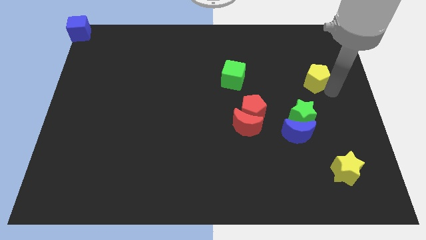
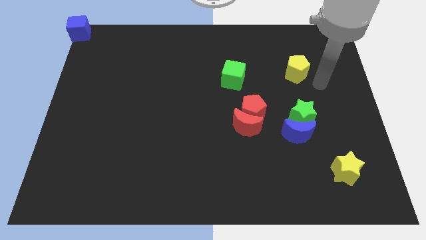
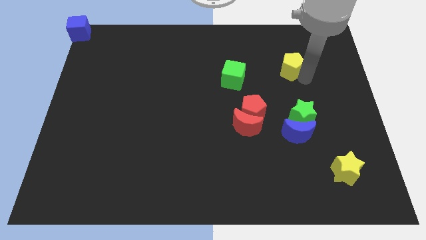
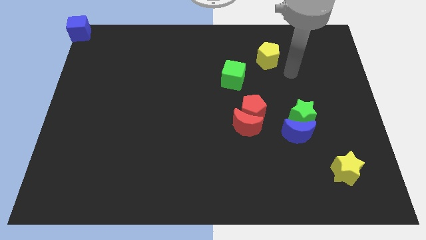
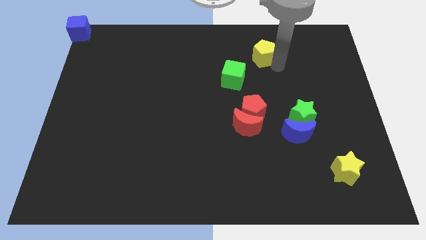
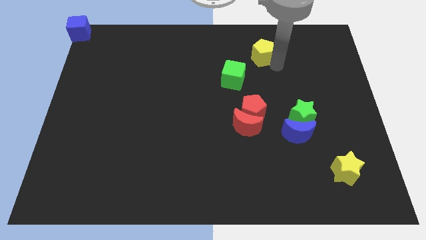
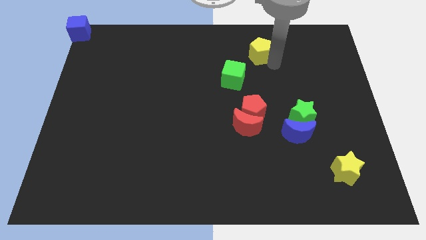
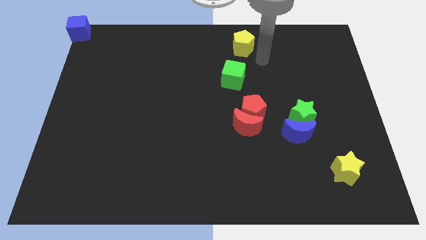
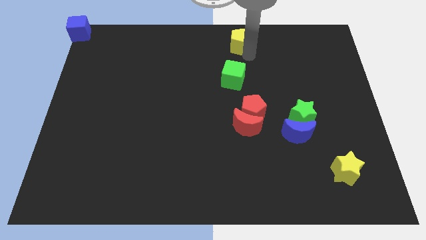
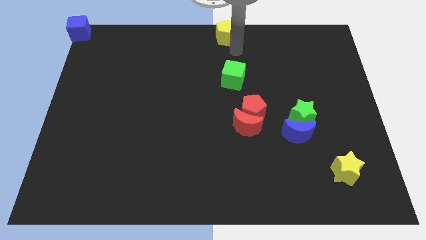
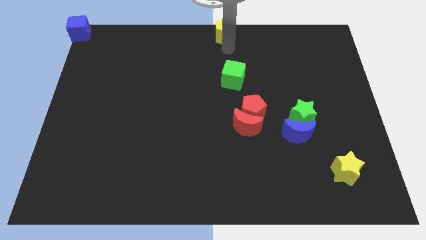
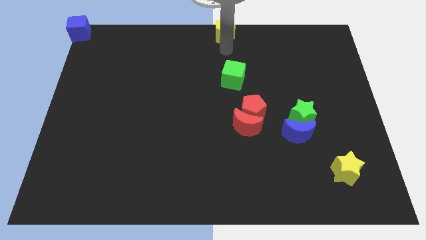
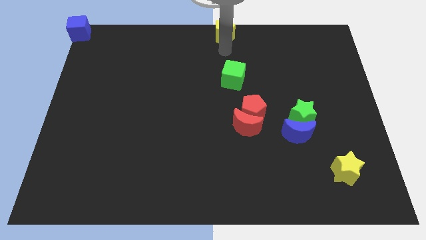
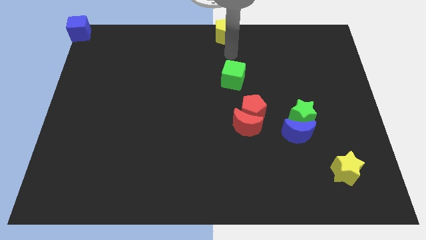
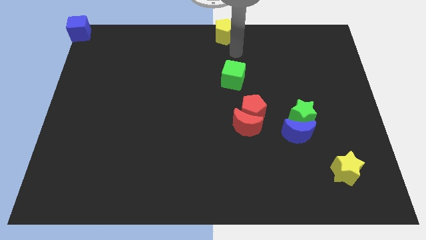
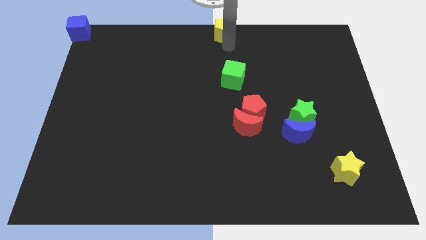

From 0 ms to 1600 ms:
put the yellow pentagon to the top center of the board

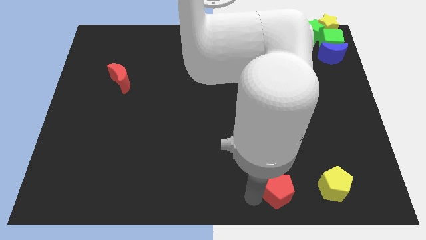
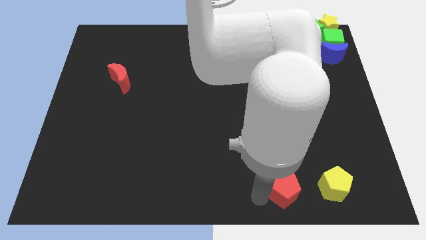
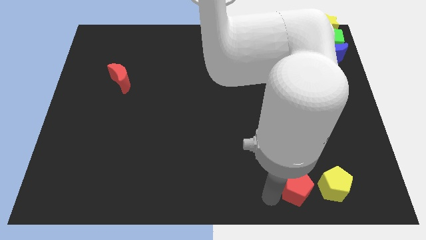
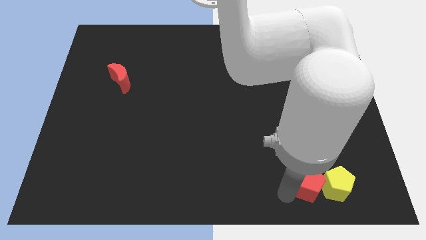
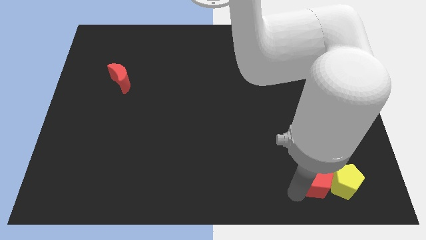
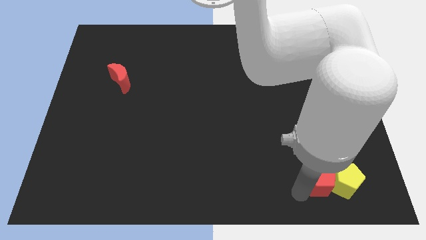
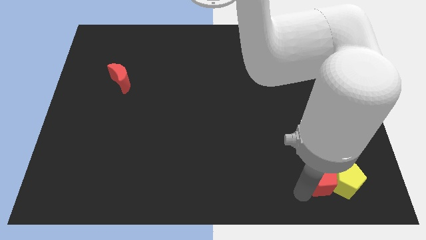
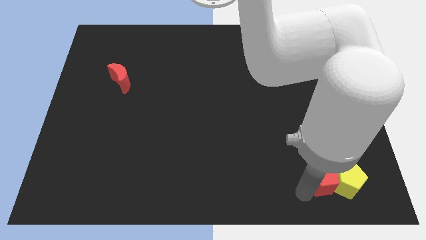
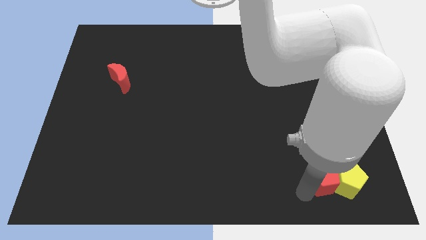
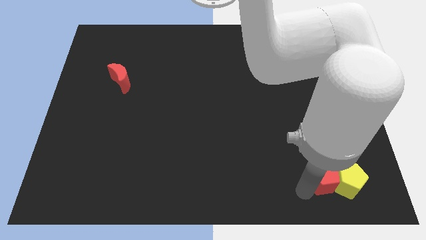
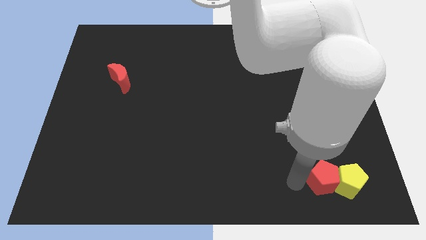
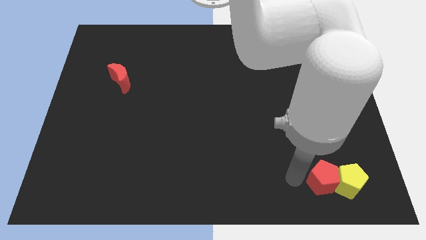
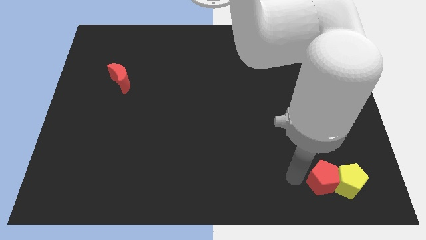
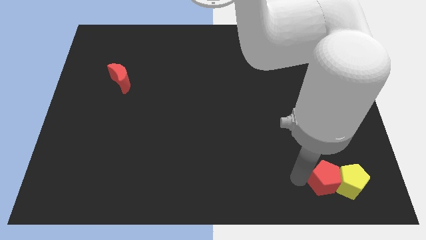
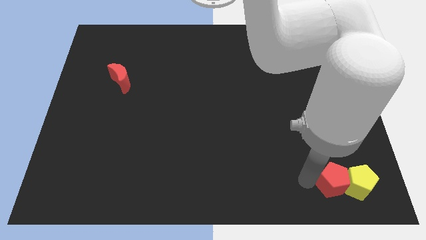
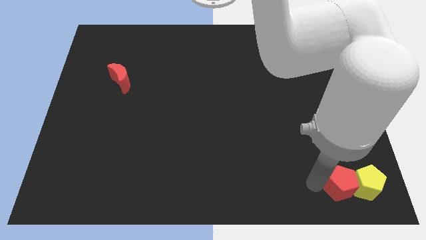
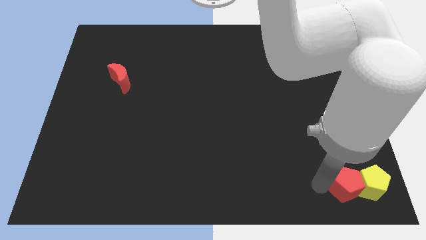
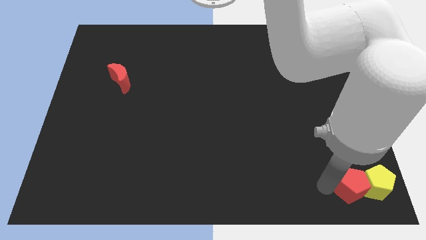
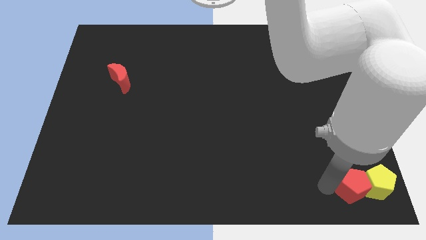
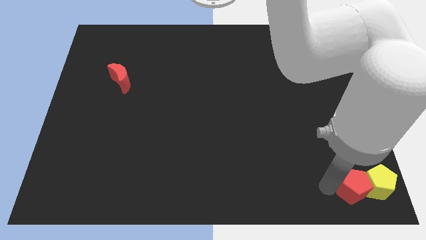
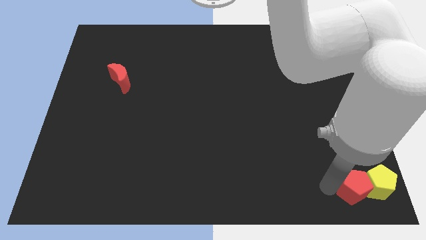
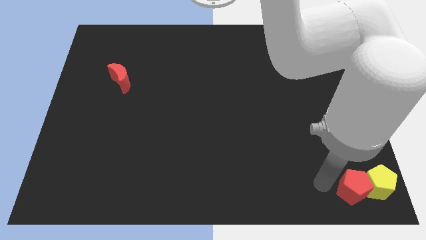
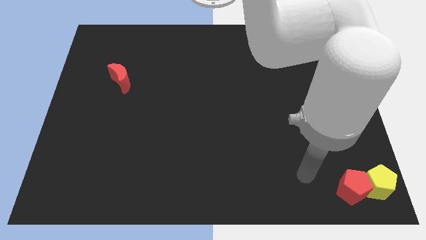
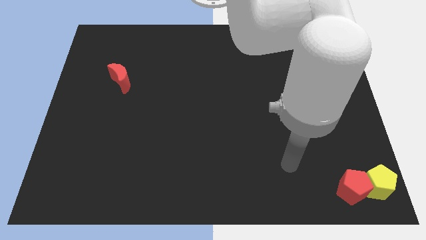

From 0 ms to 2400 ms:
move the red pentagon along with the yellow pentagon to the bottom right corner of the board

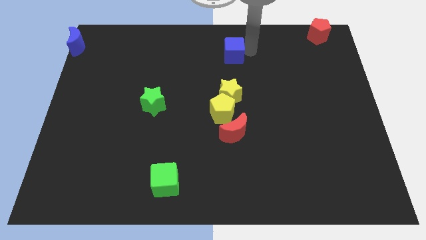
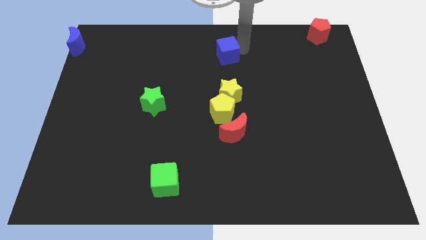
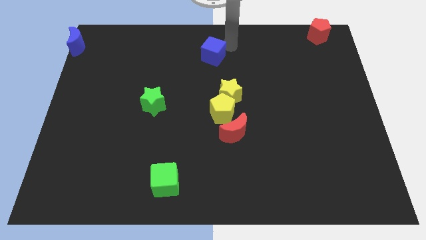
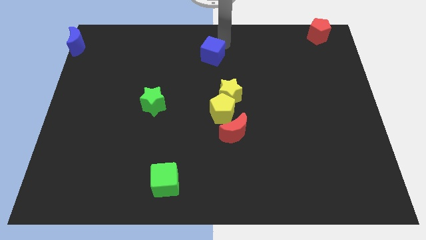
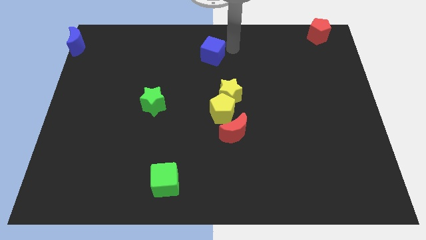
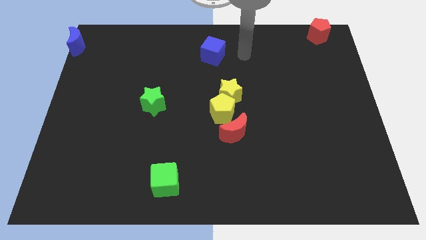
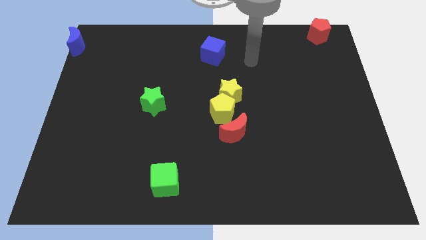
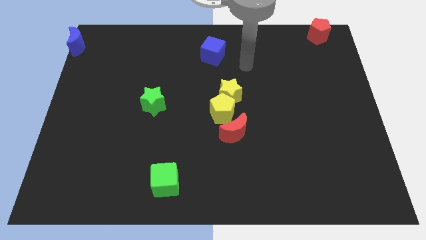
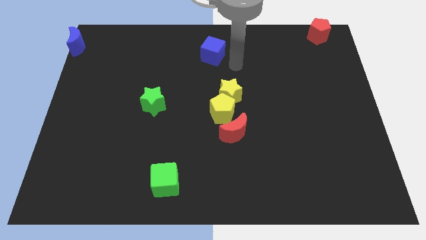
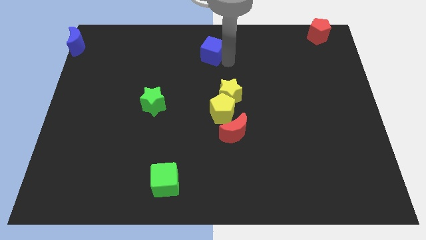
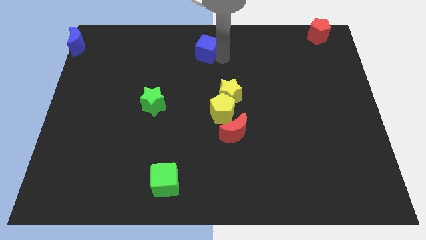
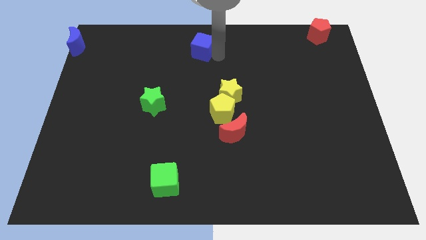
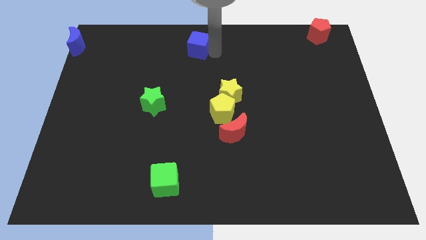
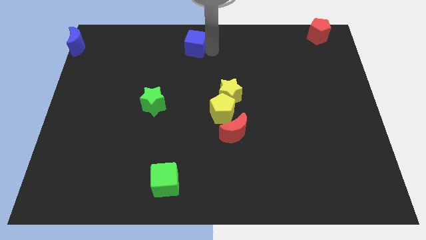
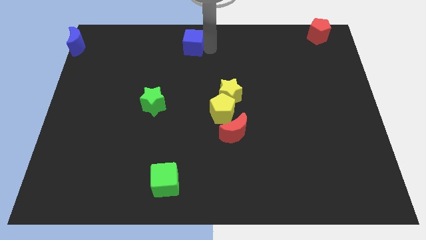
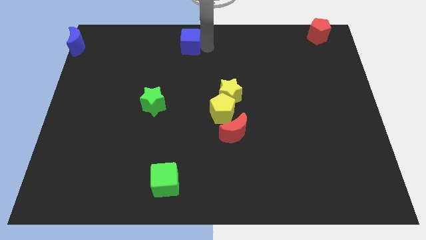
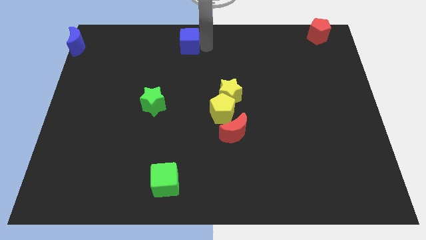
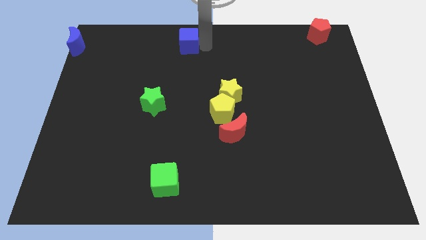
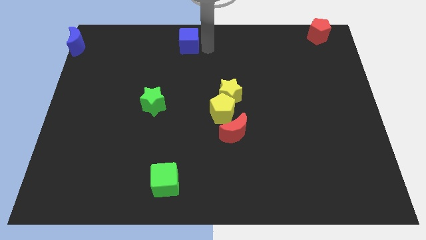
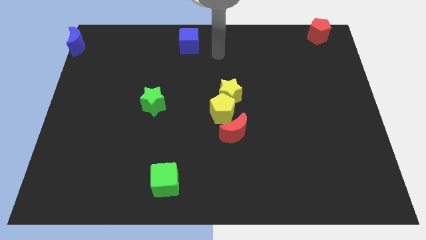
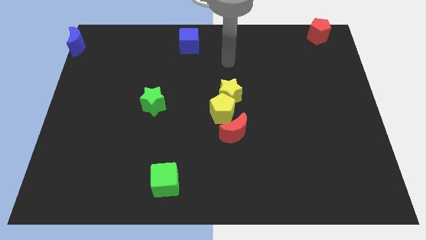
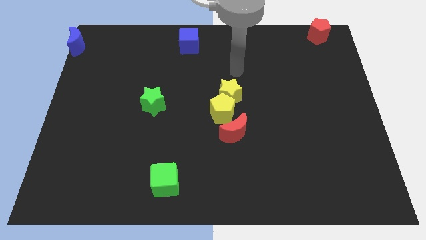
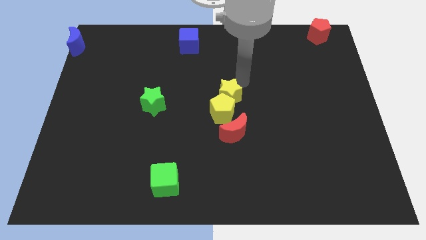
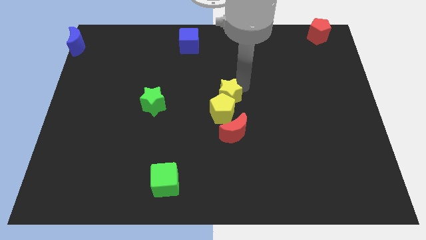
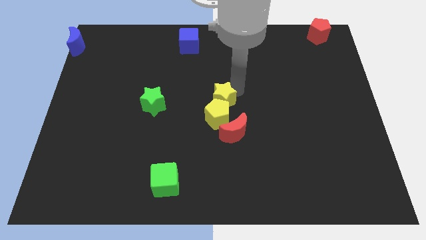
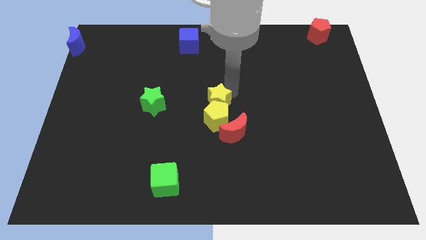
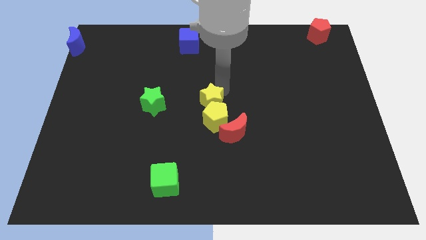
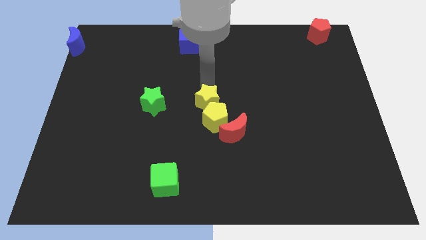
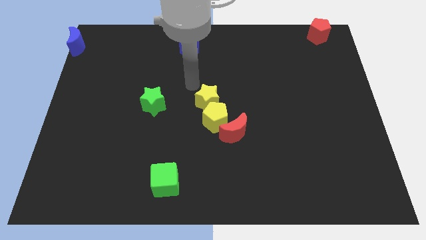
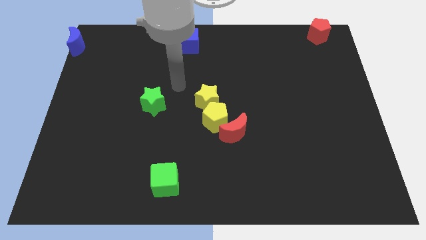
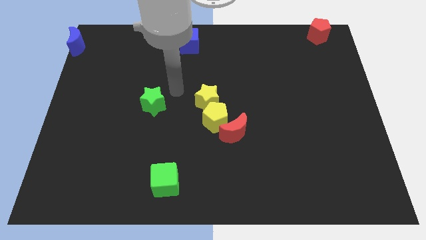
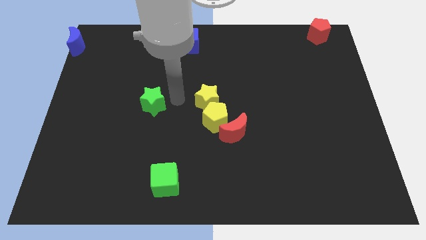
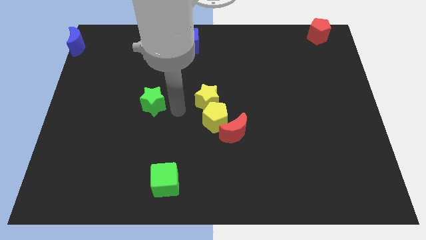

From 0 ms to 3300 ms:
place your hand in between the yellow star and green star

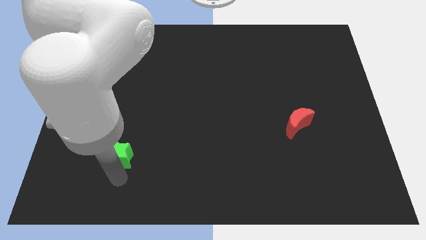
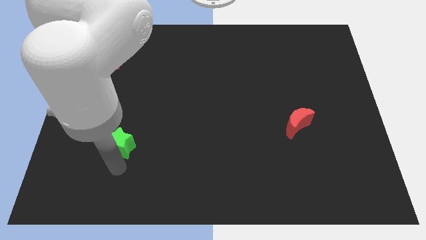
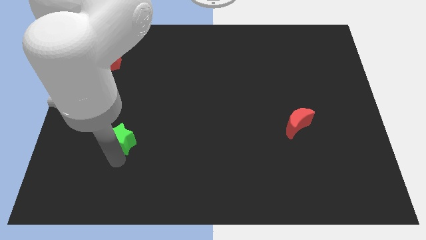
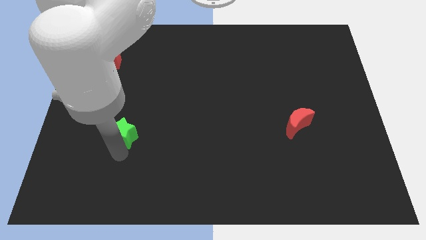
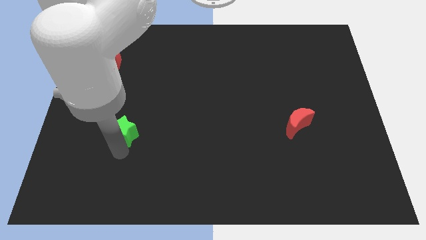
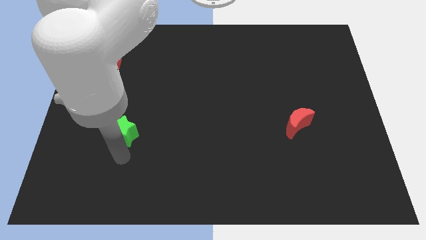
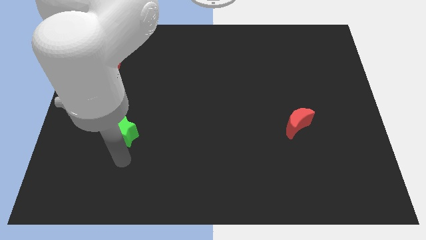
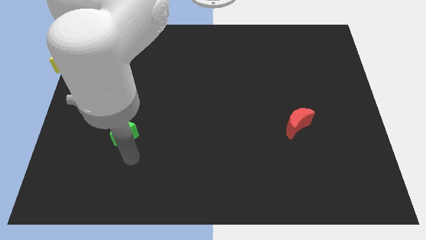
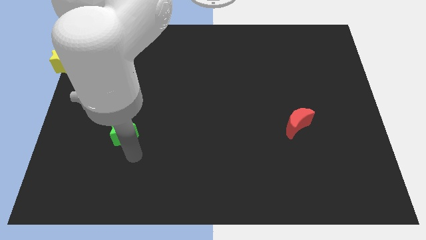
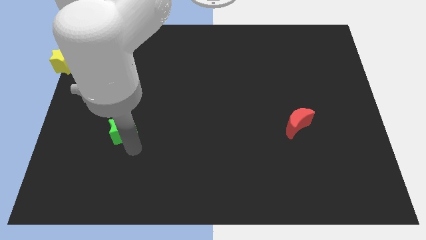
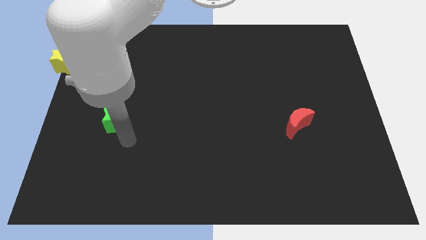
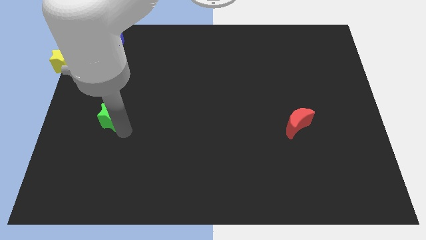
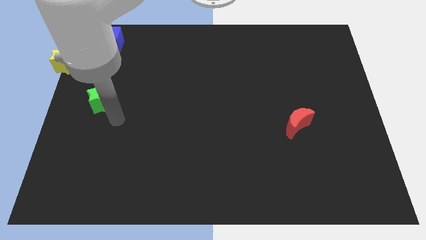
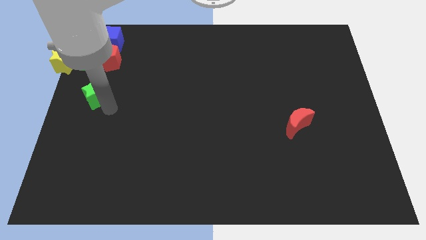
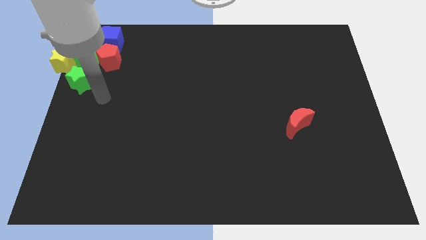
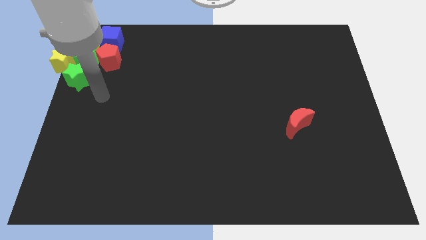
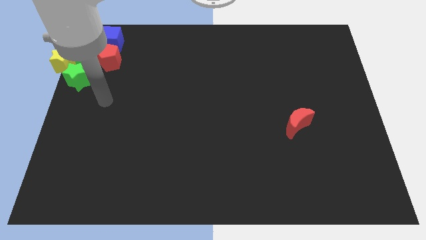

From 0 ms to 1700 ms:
place the green star below the green cube
